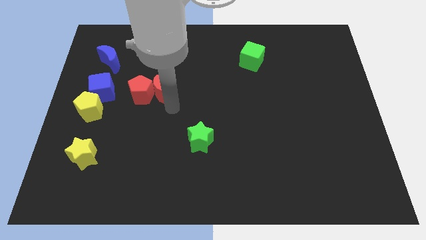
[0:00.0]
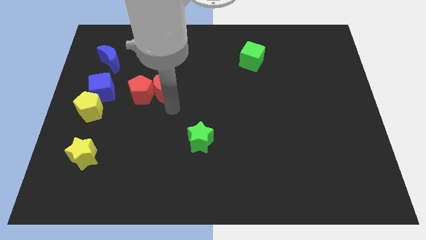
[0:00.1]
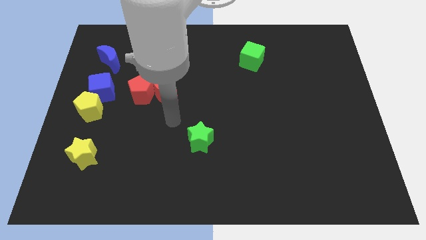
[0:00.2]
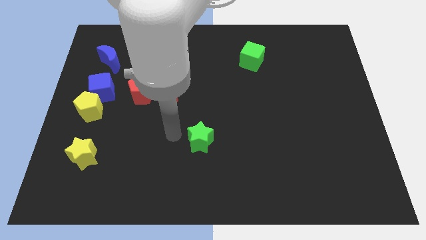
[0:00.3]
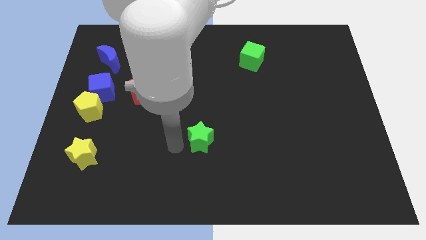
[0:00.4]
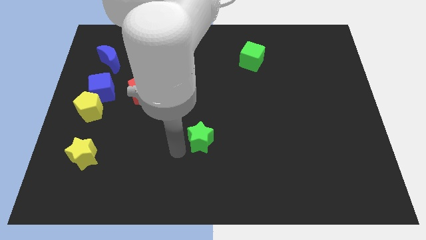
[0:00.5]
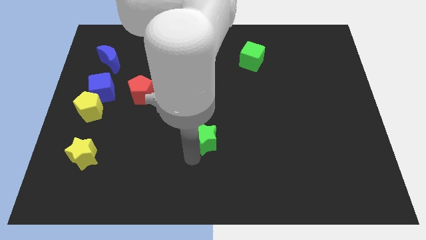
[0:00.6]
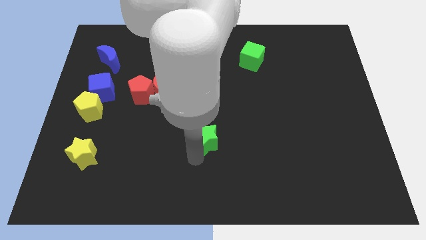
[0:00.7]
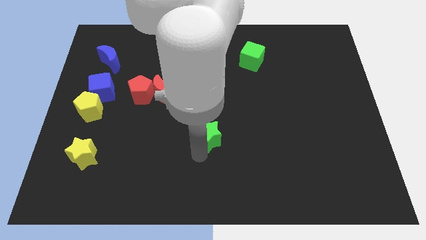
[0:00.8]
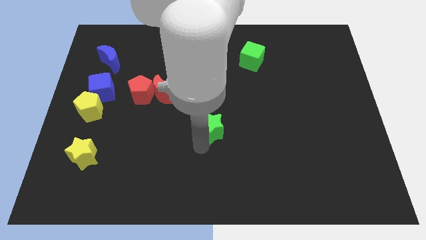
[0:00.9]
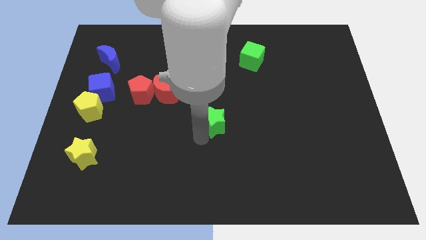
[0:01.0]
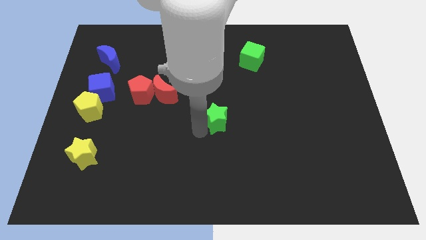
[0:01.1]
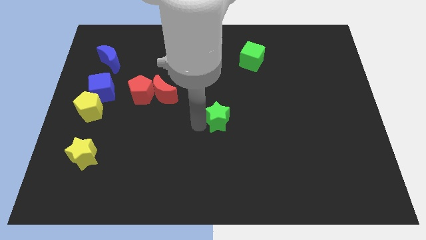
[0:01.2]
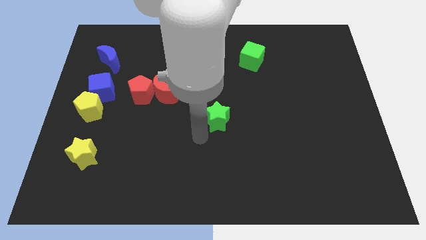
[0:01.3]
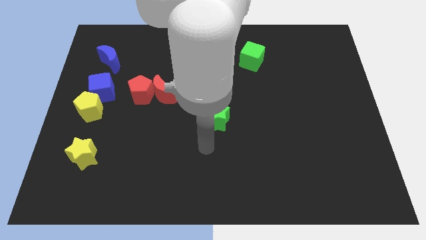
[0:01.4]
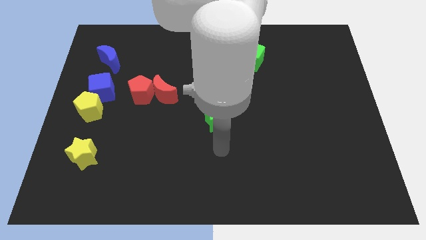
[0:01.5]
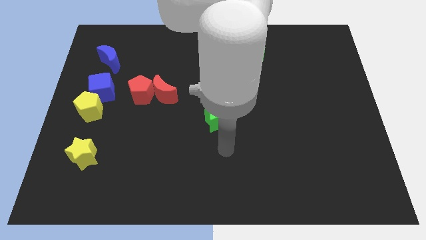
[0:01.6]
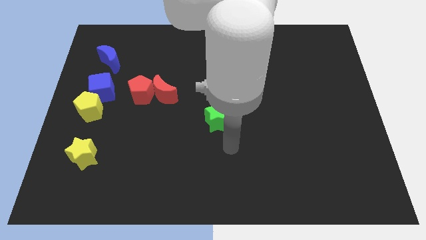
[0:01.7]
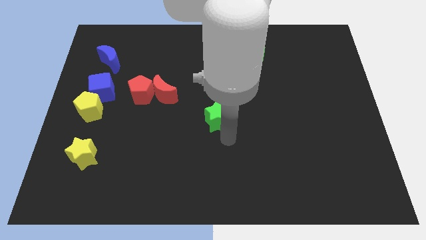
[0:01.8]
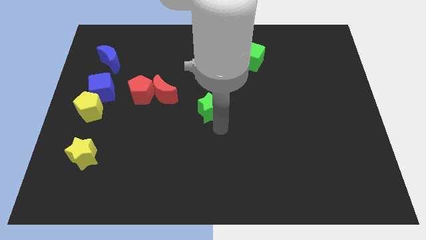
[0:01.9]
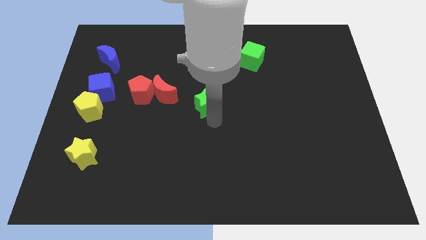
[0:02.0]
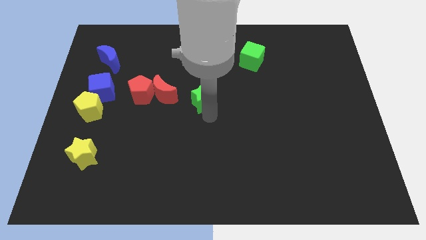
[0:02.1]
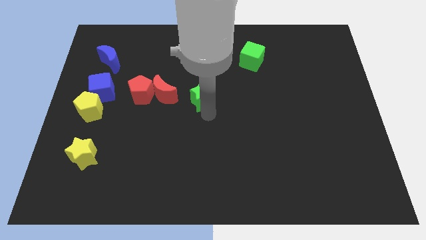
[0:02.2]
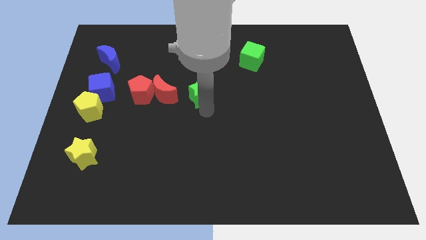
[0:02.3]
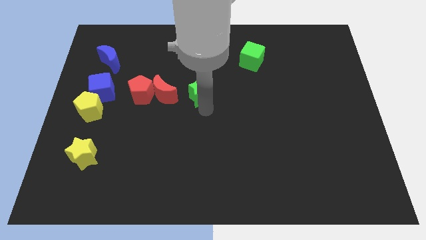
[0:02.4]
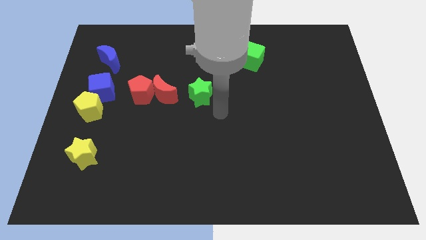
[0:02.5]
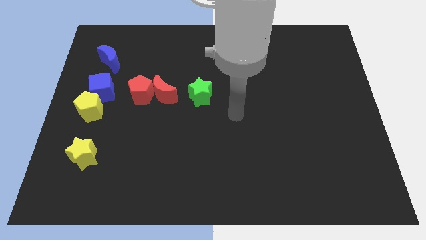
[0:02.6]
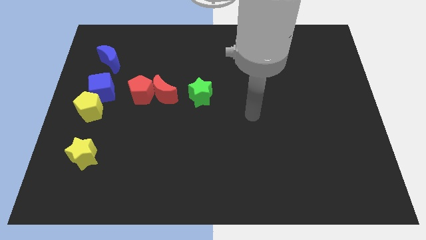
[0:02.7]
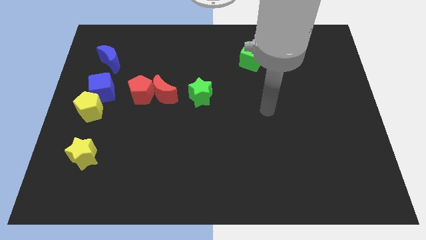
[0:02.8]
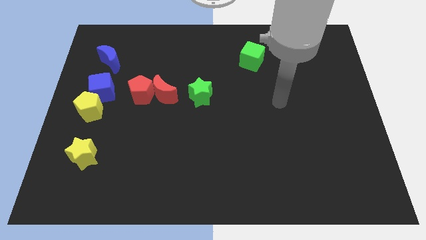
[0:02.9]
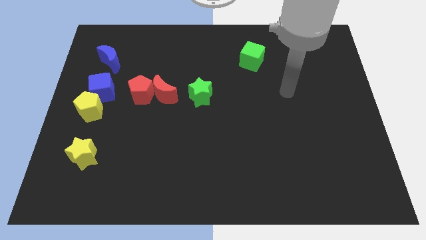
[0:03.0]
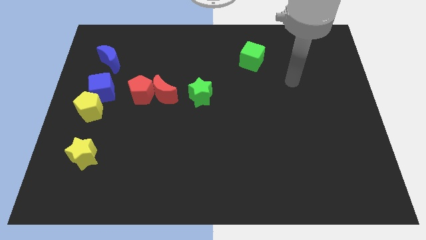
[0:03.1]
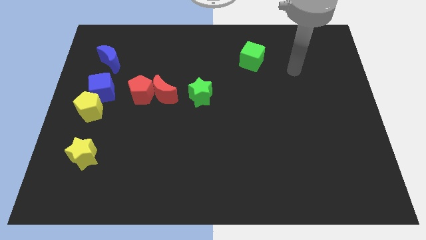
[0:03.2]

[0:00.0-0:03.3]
push the green star to the center of the board

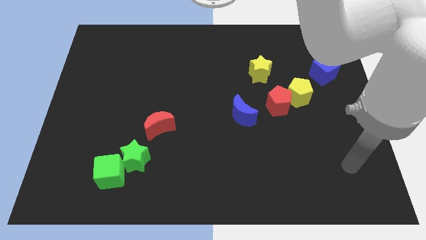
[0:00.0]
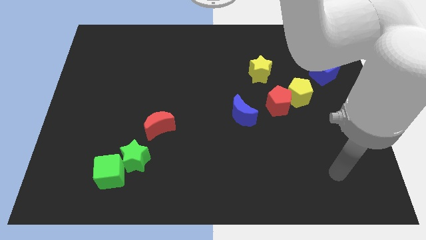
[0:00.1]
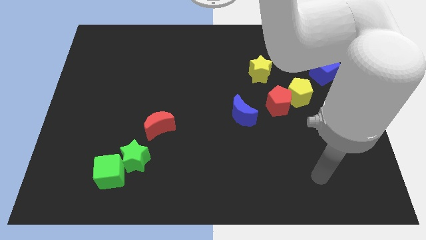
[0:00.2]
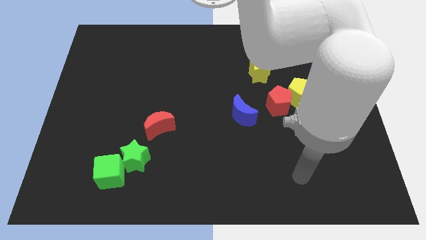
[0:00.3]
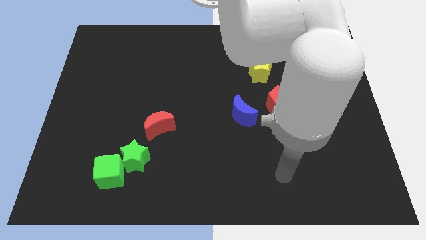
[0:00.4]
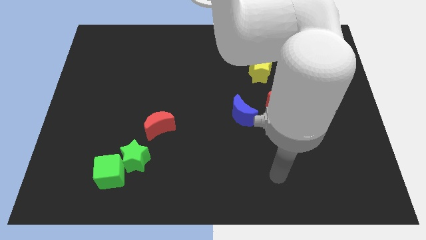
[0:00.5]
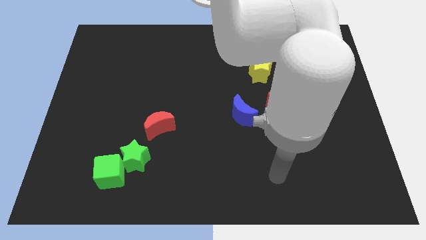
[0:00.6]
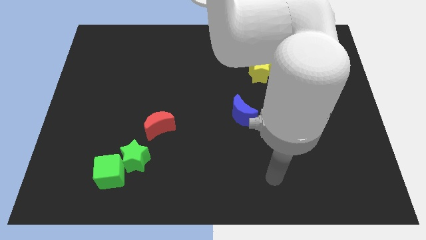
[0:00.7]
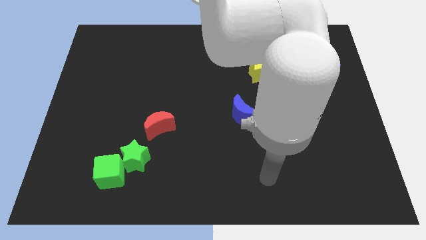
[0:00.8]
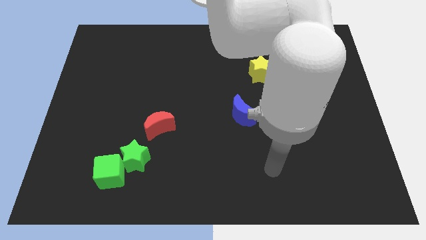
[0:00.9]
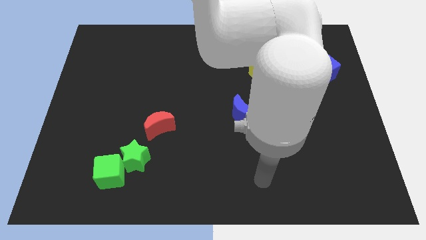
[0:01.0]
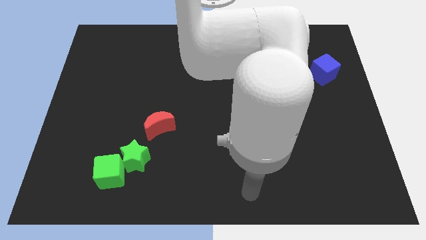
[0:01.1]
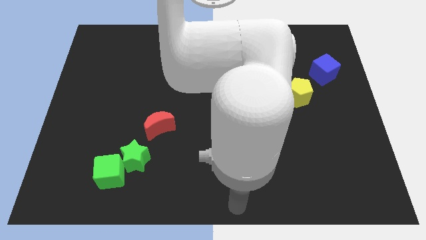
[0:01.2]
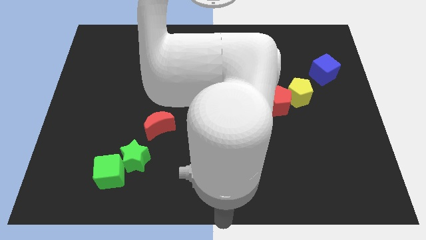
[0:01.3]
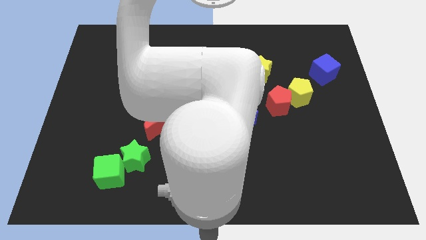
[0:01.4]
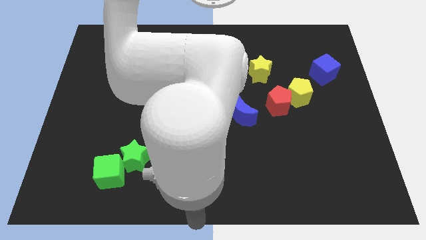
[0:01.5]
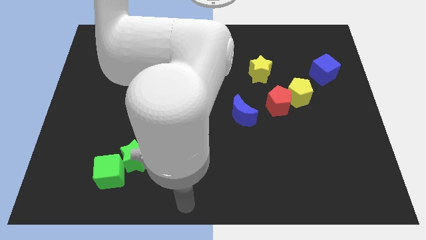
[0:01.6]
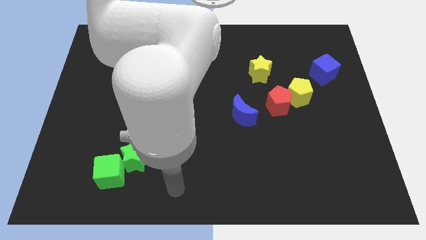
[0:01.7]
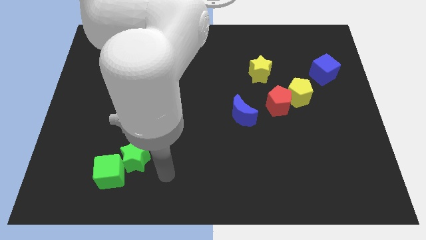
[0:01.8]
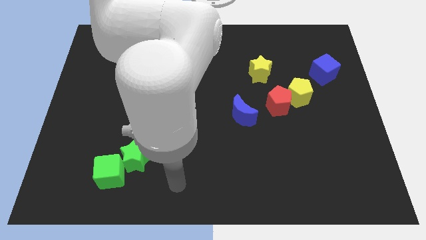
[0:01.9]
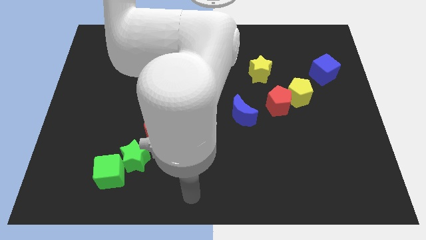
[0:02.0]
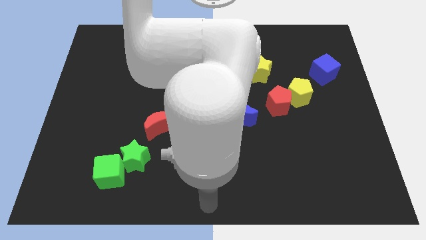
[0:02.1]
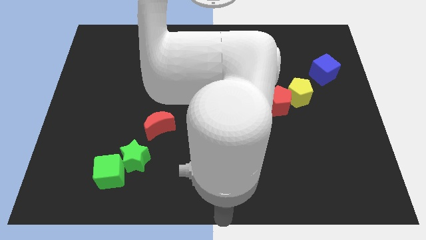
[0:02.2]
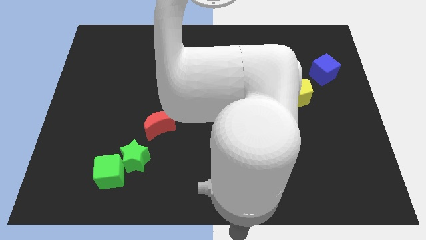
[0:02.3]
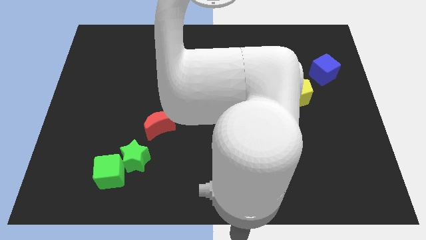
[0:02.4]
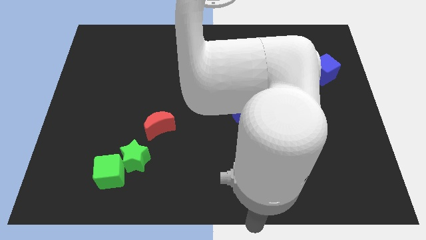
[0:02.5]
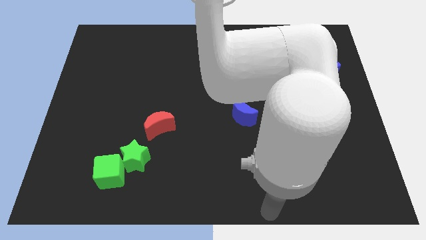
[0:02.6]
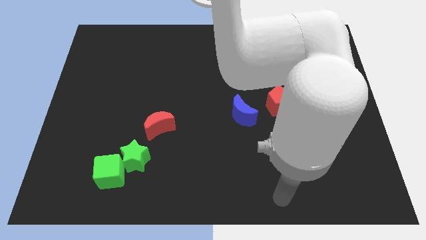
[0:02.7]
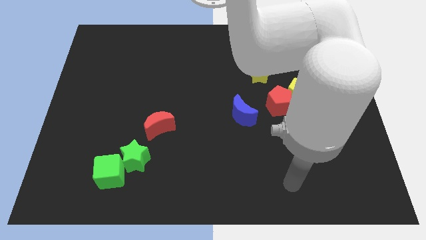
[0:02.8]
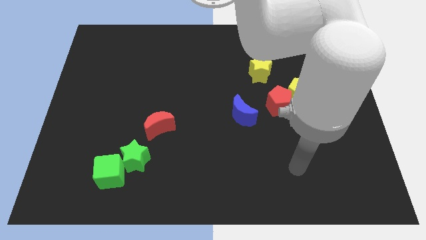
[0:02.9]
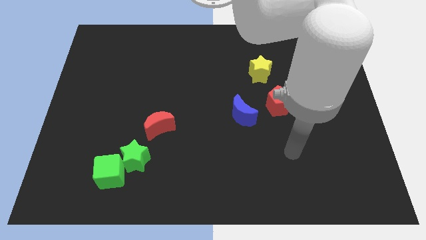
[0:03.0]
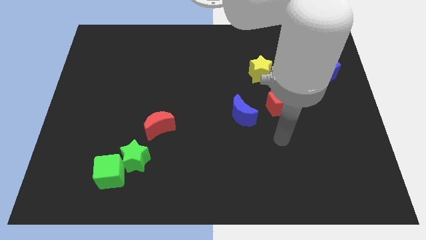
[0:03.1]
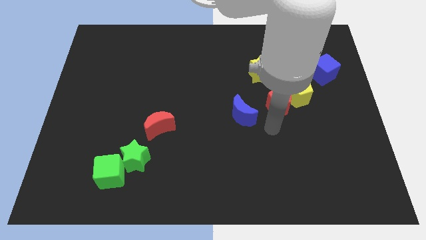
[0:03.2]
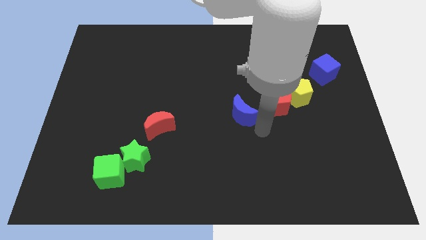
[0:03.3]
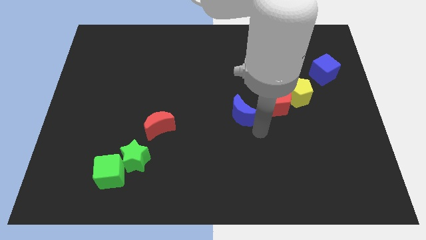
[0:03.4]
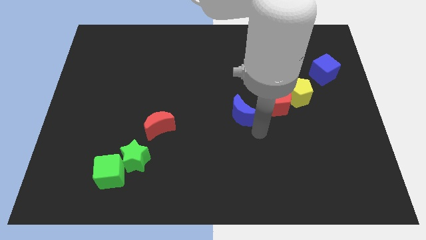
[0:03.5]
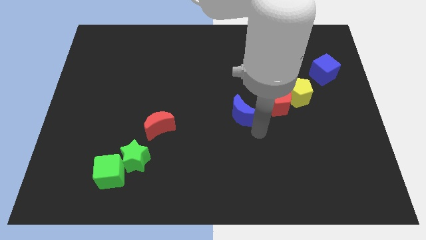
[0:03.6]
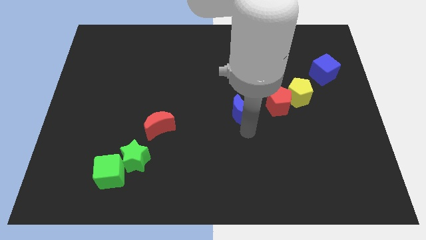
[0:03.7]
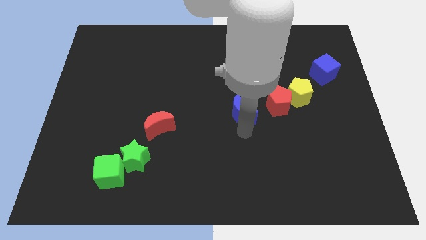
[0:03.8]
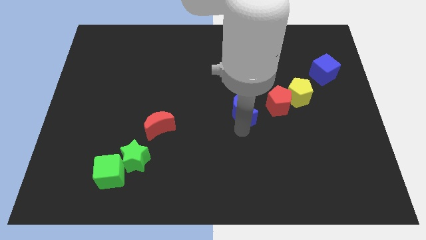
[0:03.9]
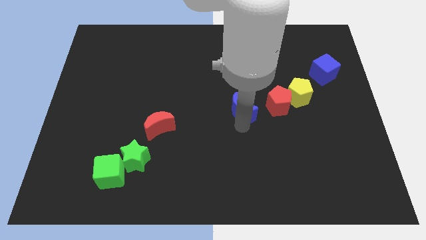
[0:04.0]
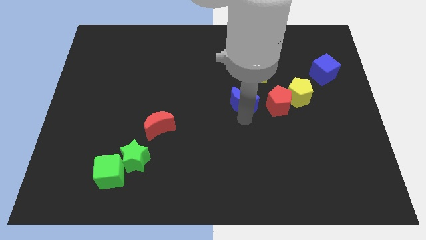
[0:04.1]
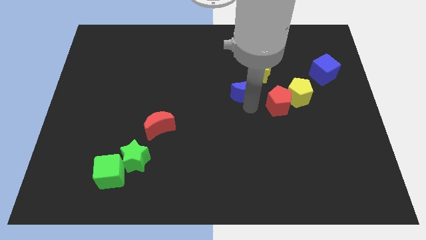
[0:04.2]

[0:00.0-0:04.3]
push the blue crescent slightly to the top

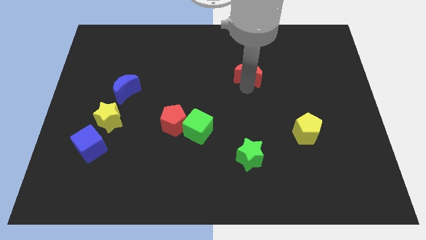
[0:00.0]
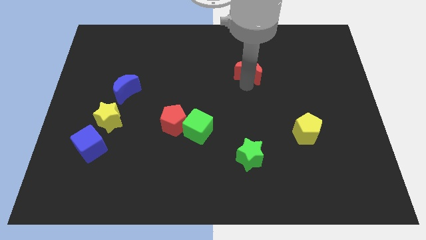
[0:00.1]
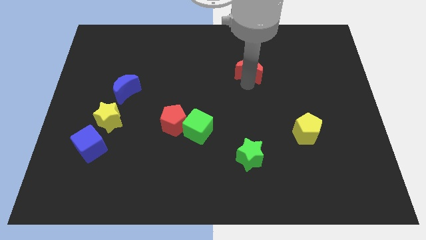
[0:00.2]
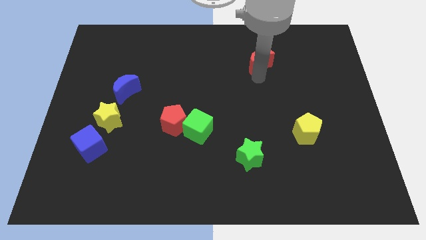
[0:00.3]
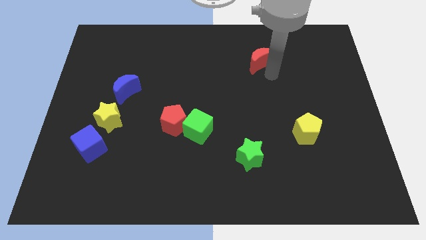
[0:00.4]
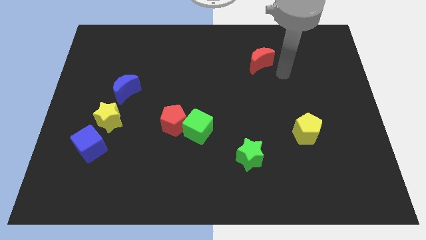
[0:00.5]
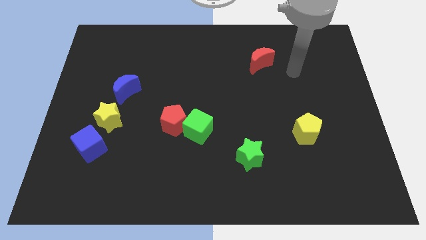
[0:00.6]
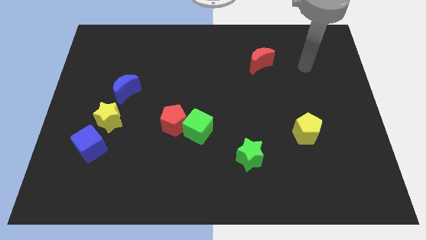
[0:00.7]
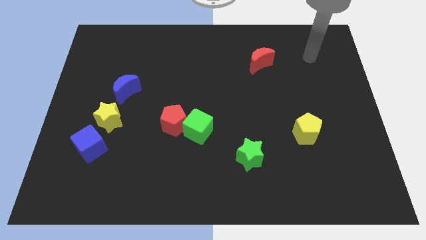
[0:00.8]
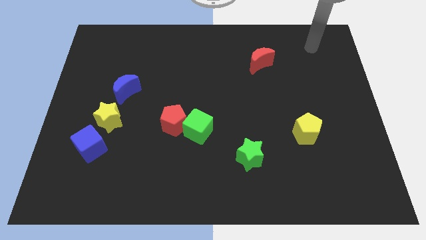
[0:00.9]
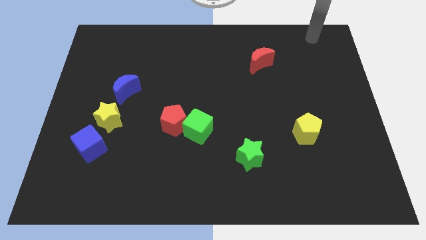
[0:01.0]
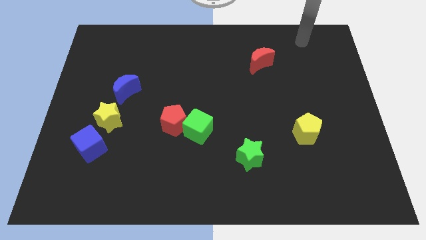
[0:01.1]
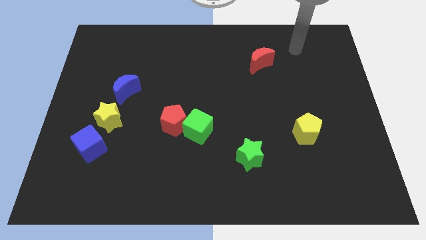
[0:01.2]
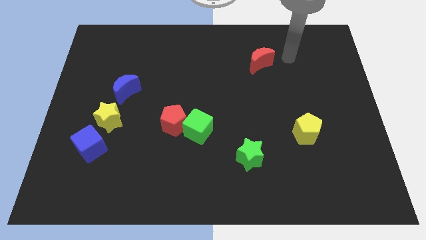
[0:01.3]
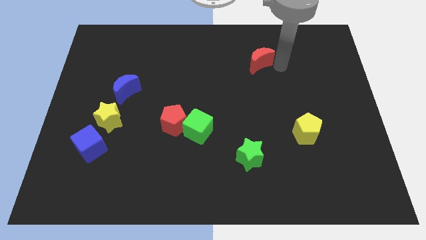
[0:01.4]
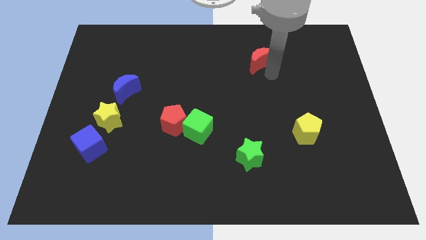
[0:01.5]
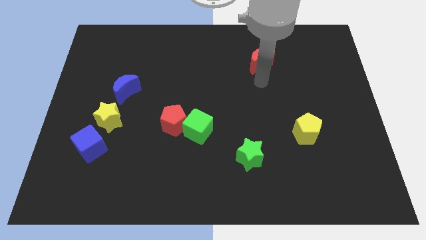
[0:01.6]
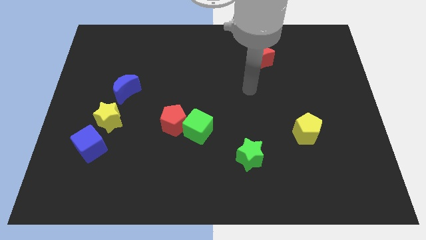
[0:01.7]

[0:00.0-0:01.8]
move the red moon diagonally to the yellow pentagon
